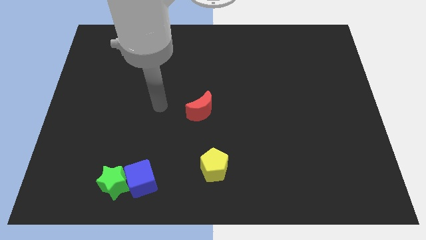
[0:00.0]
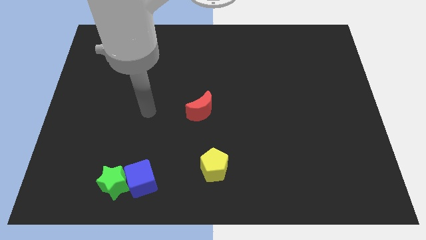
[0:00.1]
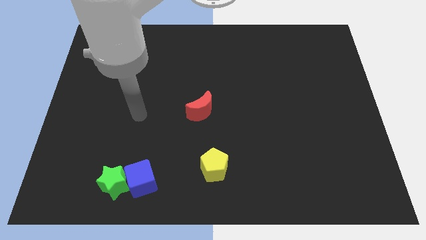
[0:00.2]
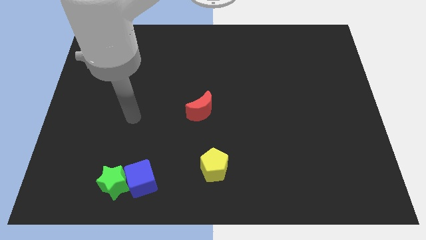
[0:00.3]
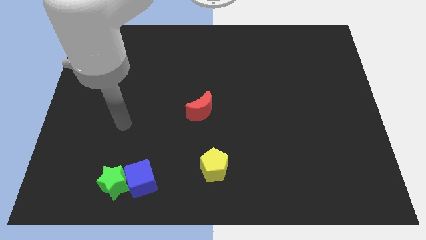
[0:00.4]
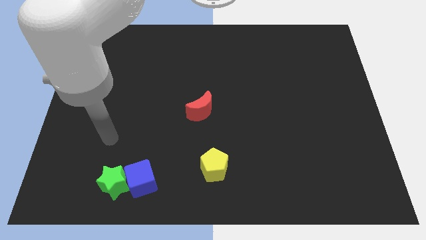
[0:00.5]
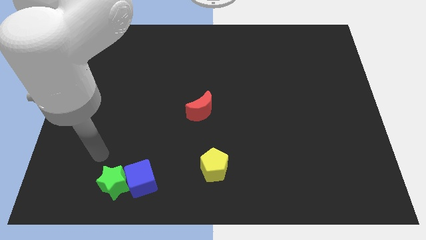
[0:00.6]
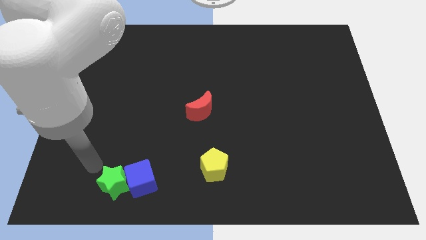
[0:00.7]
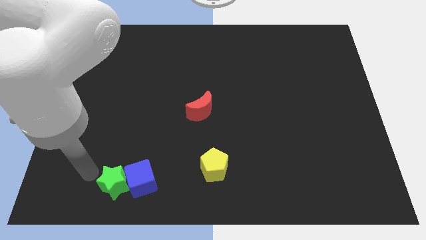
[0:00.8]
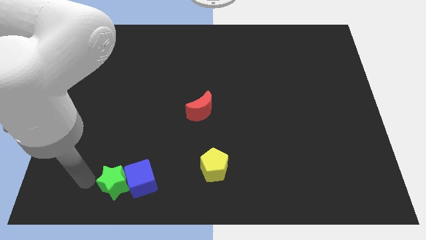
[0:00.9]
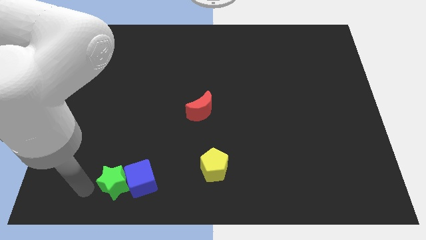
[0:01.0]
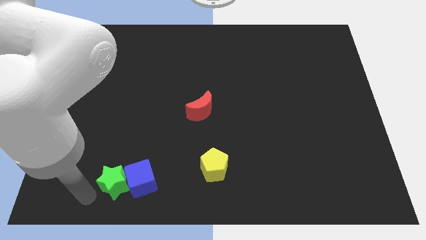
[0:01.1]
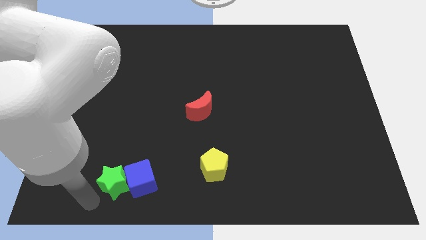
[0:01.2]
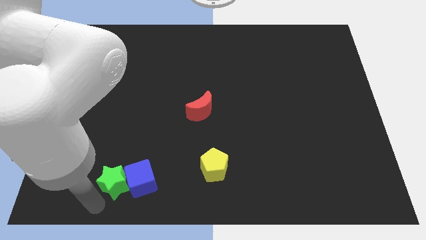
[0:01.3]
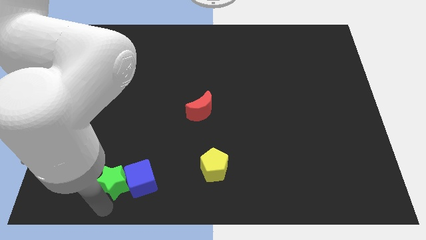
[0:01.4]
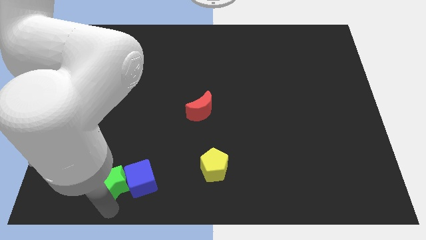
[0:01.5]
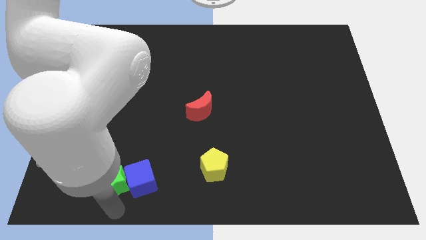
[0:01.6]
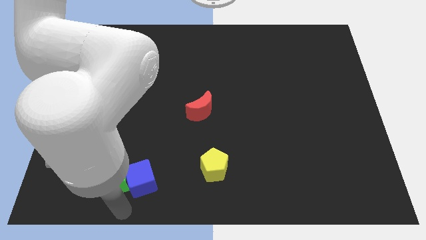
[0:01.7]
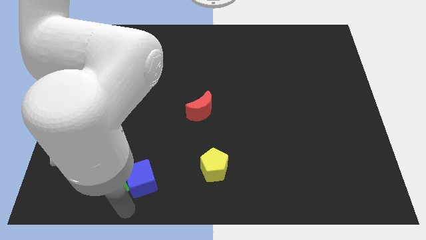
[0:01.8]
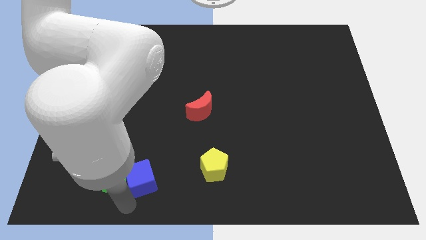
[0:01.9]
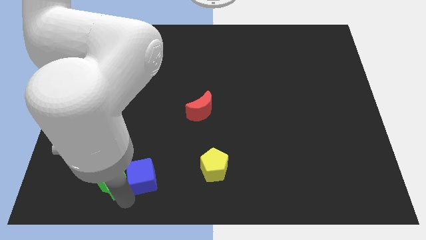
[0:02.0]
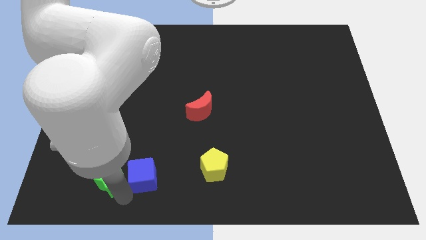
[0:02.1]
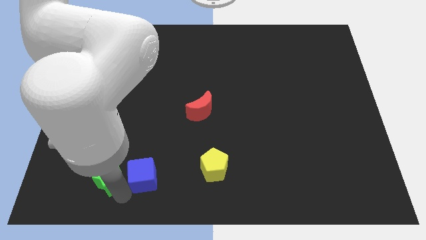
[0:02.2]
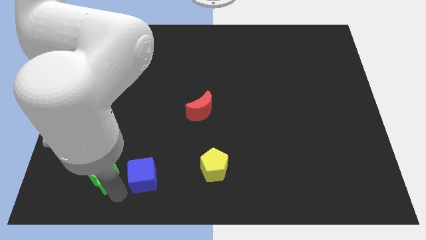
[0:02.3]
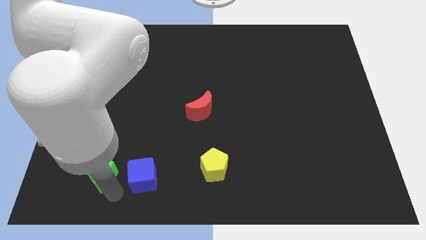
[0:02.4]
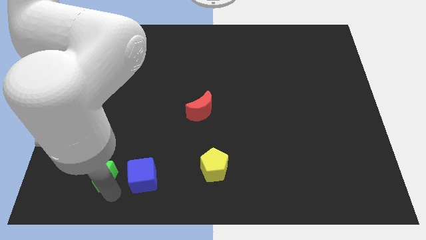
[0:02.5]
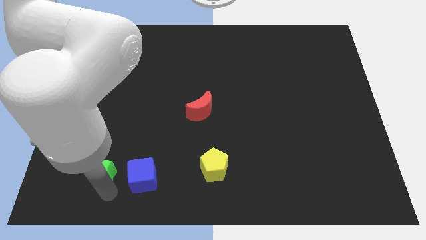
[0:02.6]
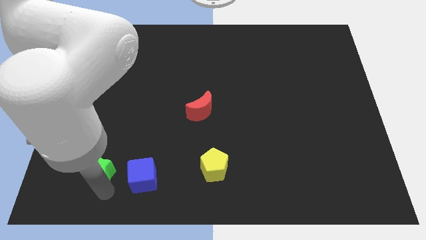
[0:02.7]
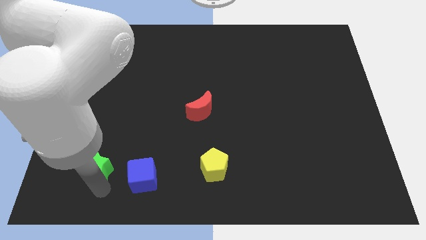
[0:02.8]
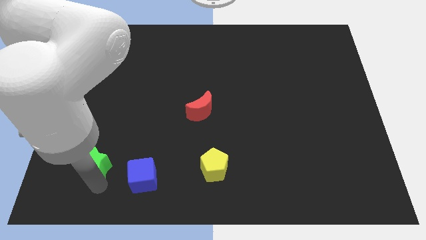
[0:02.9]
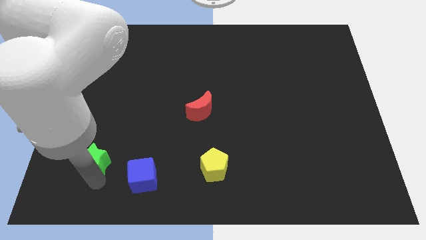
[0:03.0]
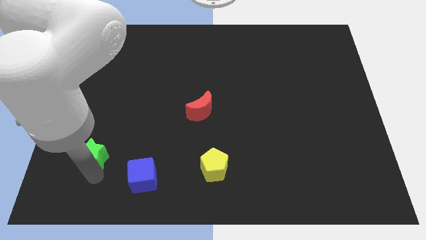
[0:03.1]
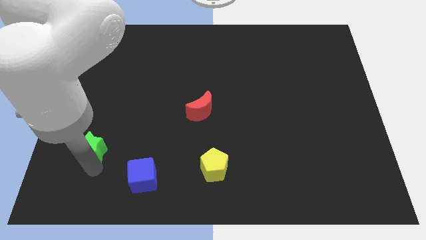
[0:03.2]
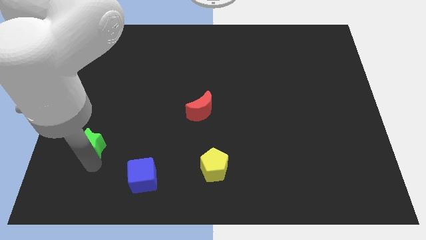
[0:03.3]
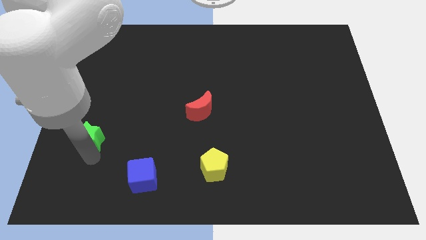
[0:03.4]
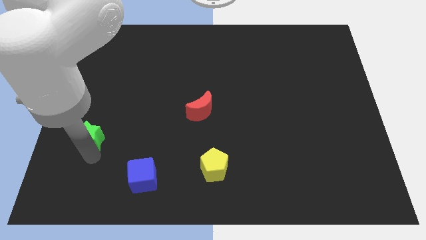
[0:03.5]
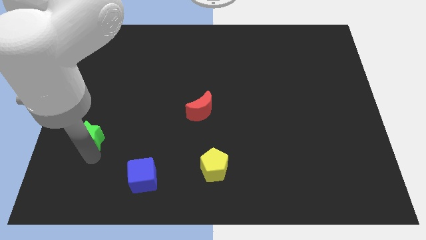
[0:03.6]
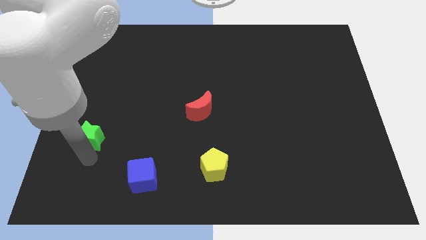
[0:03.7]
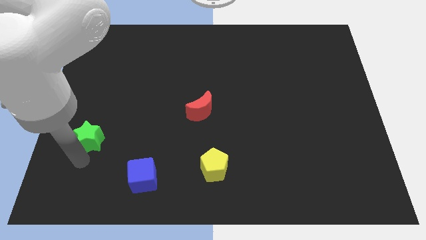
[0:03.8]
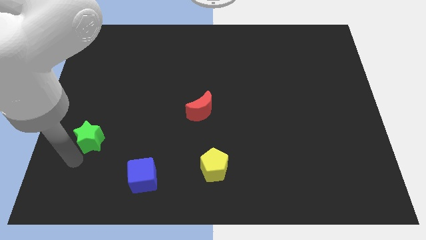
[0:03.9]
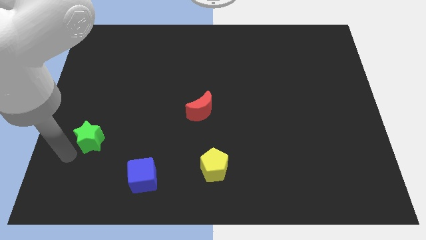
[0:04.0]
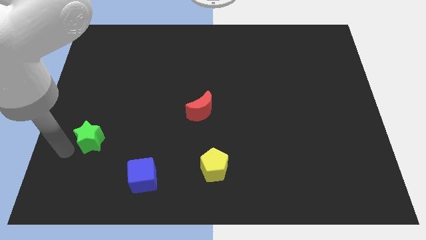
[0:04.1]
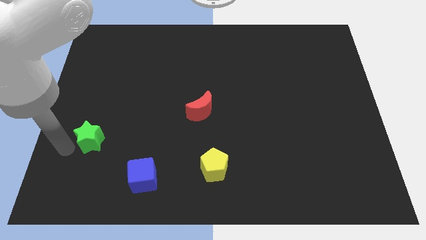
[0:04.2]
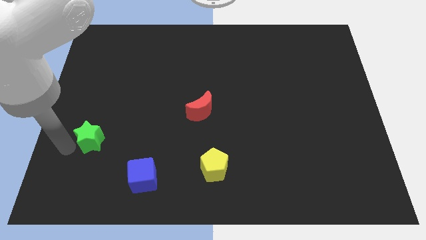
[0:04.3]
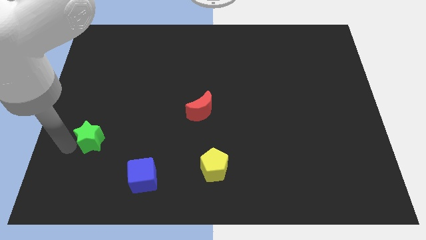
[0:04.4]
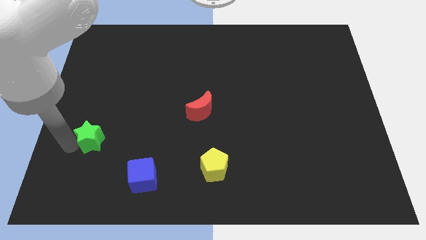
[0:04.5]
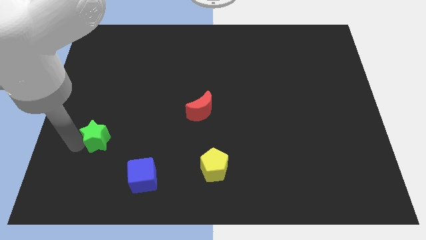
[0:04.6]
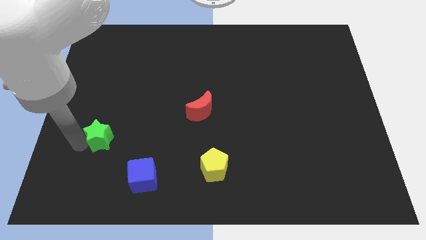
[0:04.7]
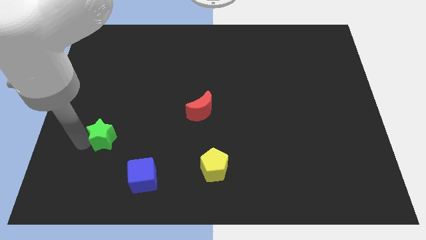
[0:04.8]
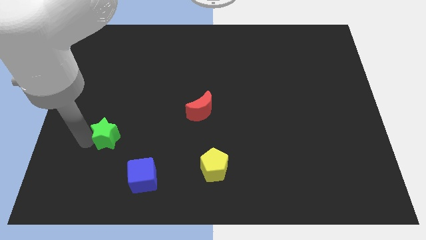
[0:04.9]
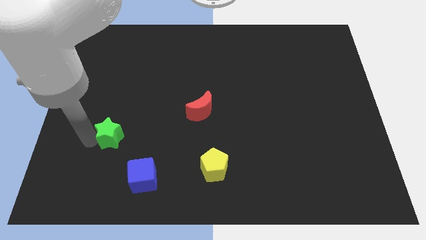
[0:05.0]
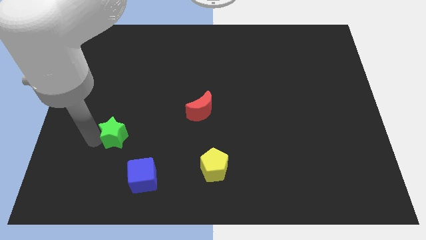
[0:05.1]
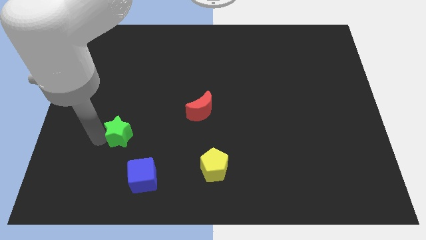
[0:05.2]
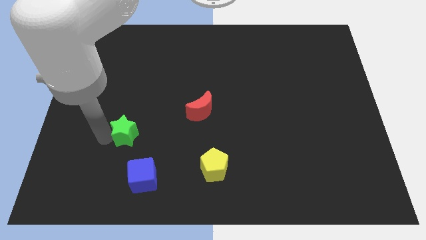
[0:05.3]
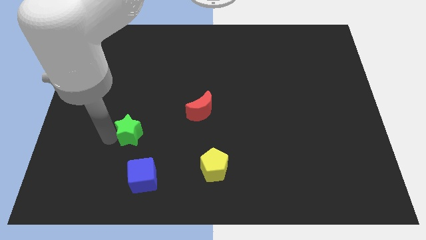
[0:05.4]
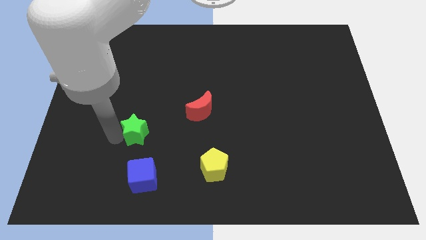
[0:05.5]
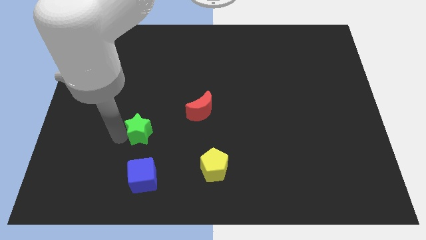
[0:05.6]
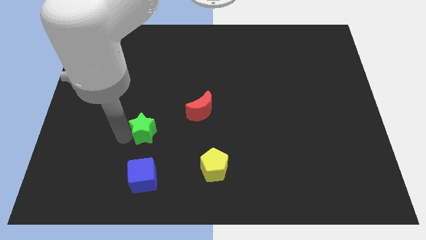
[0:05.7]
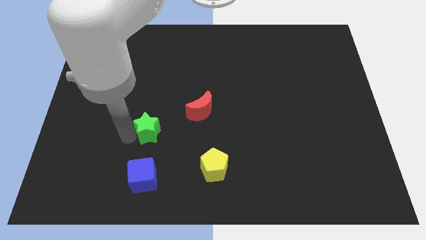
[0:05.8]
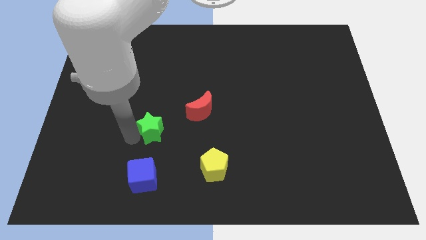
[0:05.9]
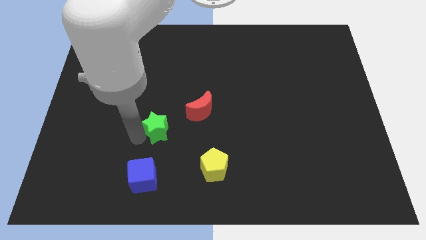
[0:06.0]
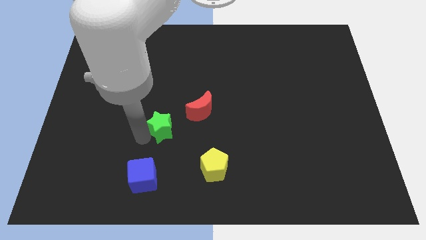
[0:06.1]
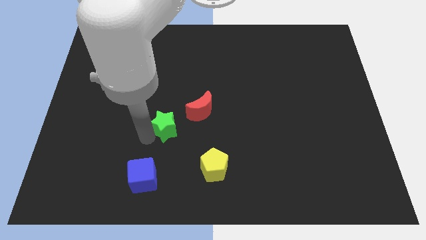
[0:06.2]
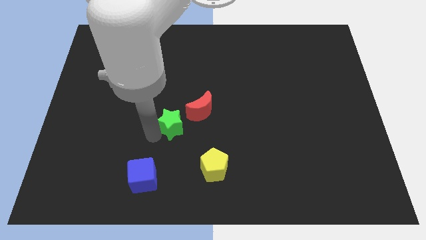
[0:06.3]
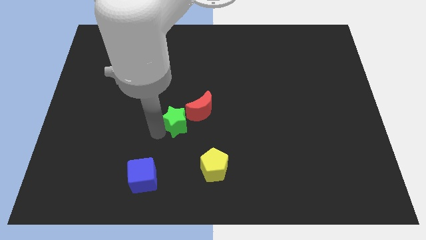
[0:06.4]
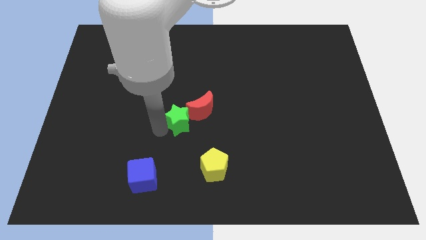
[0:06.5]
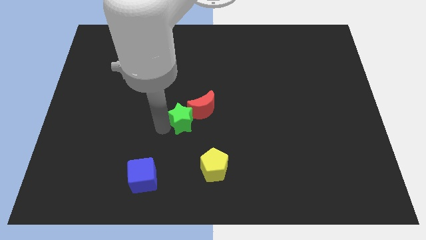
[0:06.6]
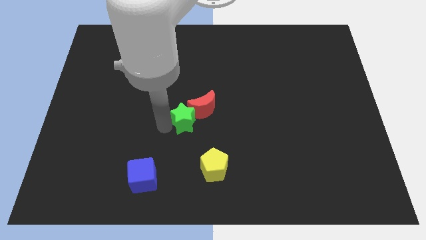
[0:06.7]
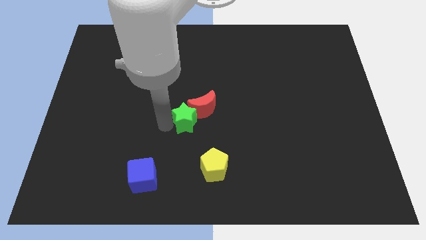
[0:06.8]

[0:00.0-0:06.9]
move the green block next to the red moon

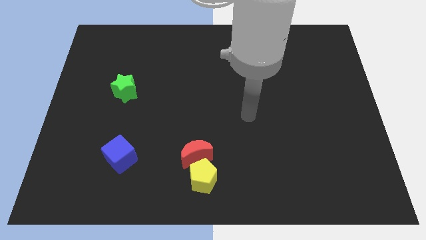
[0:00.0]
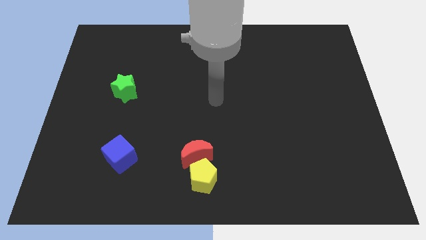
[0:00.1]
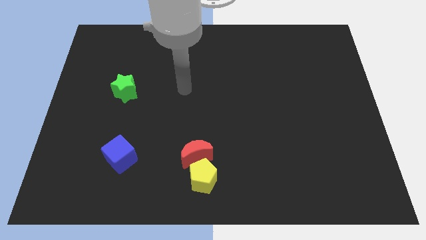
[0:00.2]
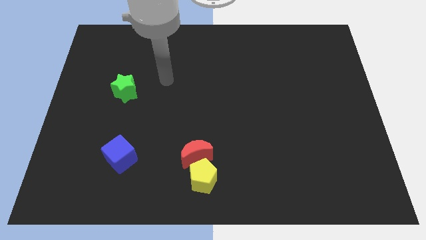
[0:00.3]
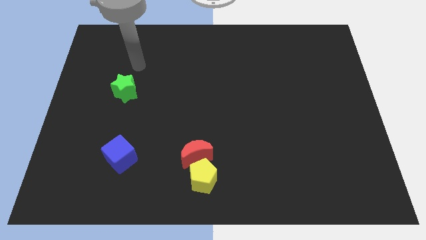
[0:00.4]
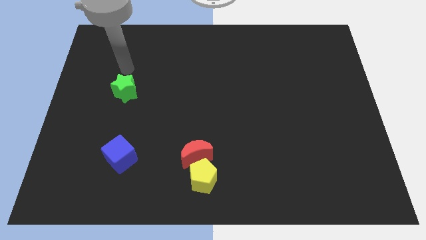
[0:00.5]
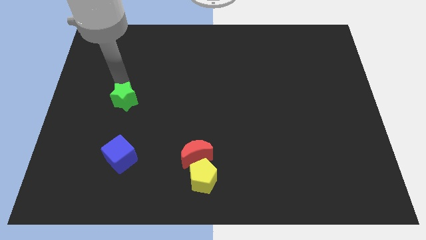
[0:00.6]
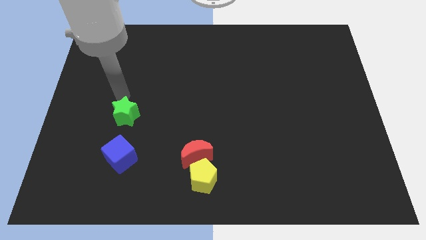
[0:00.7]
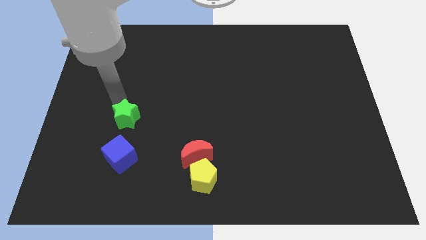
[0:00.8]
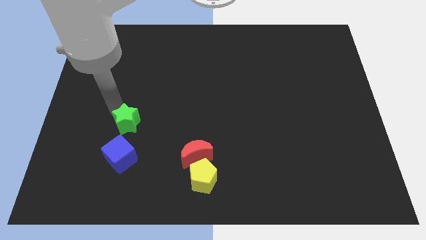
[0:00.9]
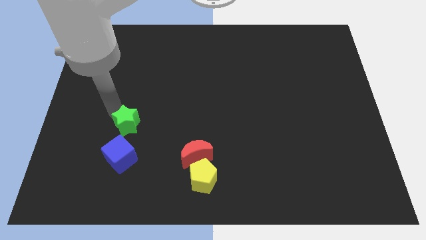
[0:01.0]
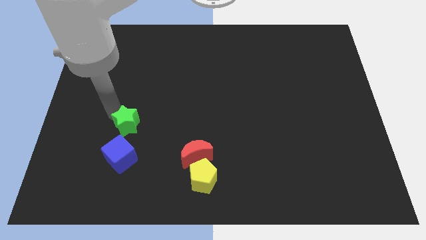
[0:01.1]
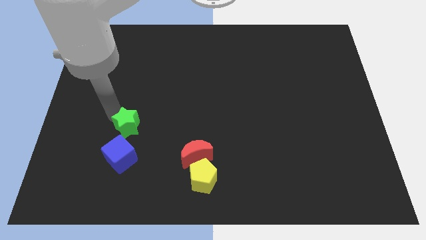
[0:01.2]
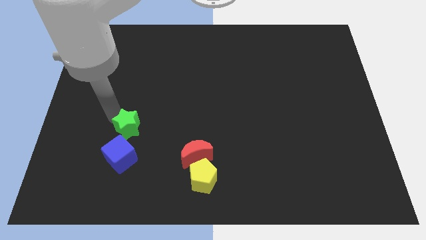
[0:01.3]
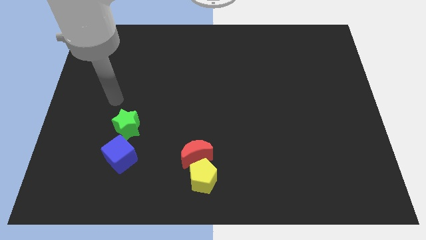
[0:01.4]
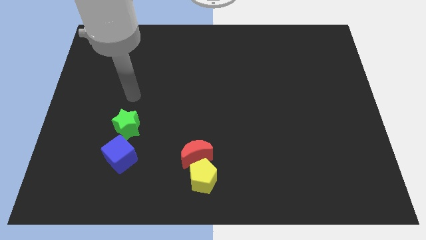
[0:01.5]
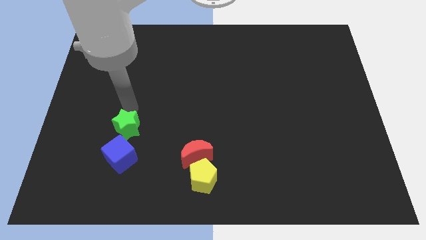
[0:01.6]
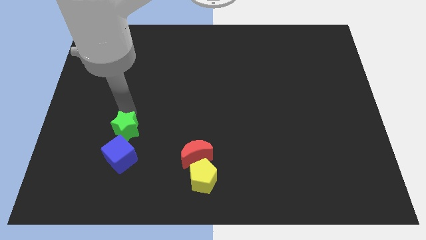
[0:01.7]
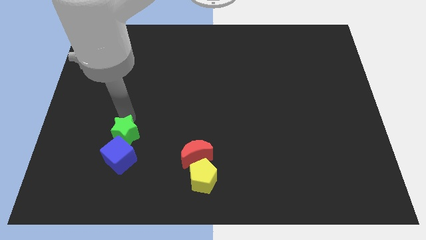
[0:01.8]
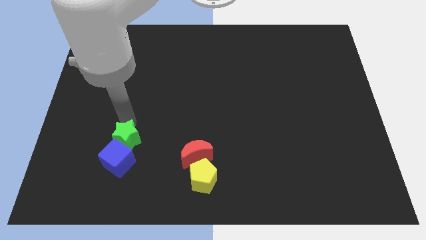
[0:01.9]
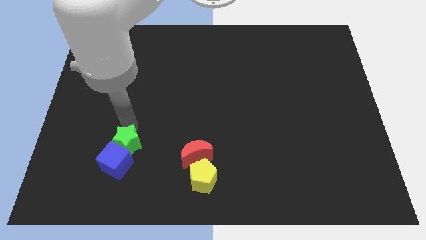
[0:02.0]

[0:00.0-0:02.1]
move the green star close to the blue cube
